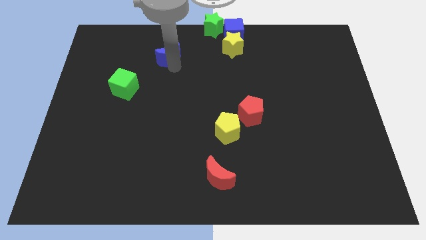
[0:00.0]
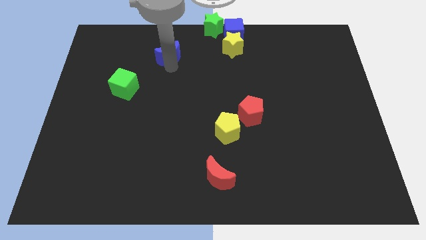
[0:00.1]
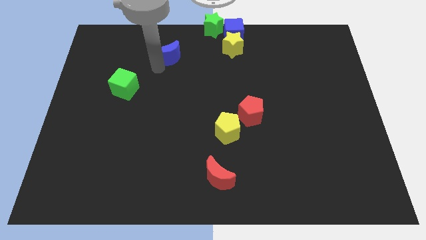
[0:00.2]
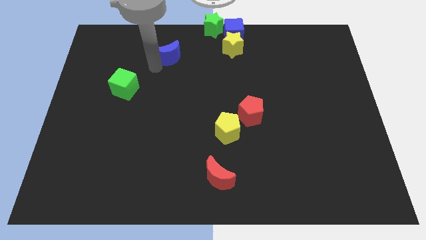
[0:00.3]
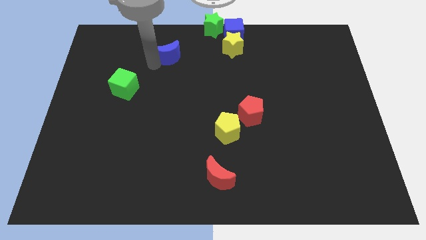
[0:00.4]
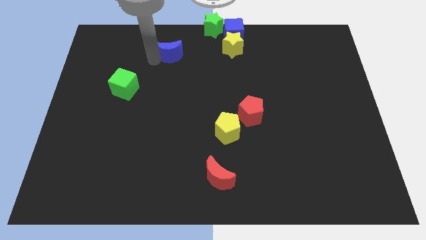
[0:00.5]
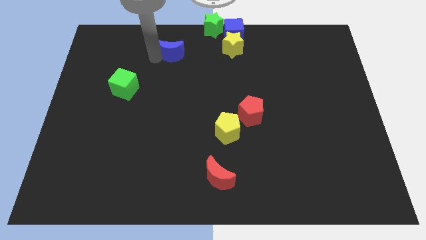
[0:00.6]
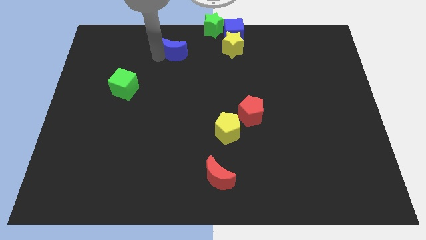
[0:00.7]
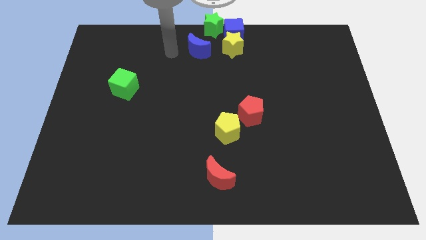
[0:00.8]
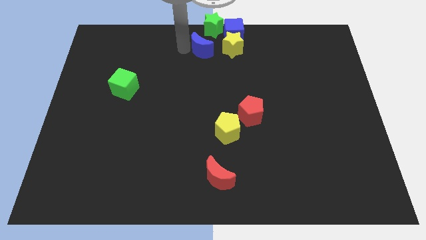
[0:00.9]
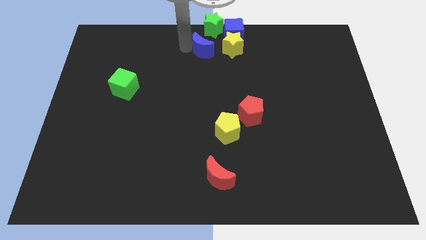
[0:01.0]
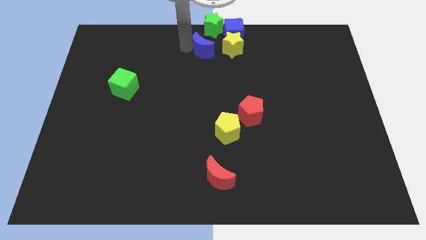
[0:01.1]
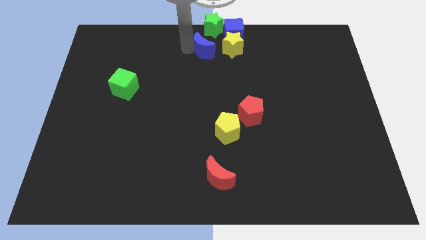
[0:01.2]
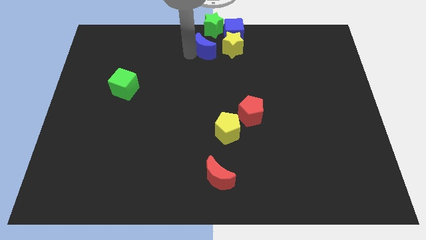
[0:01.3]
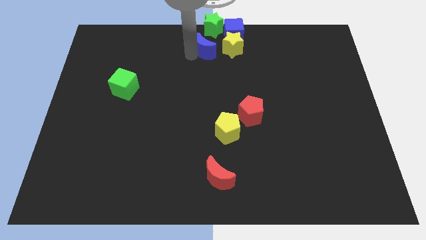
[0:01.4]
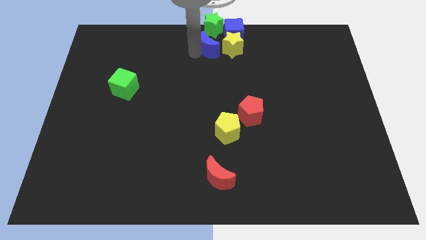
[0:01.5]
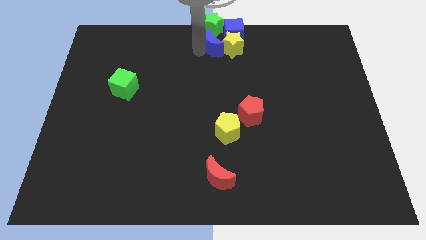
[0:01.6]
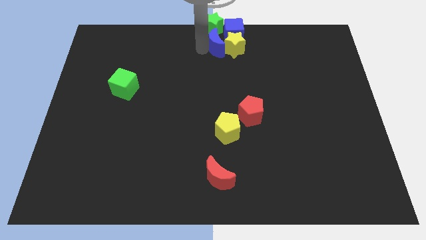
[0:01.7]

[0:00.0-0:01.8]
place the blue moon to the left of the yellow star

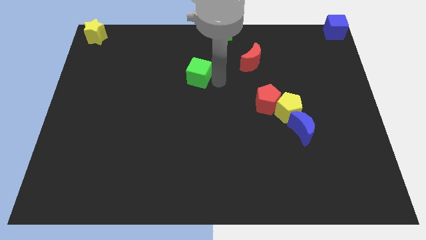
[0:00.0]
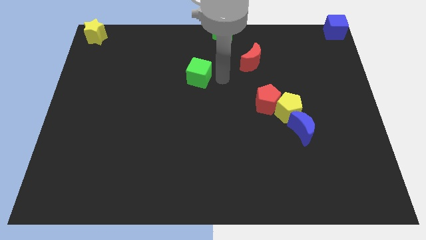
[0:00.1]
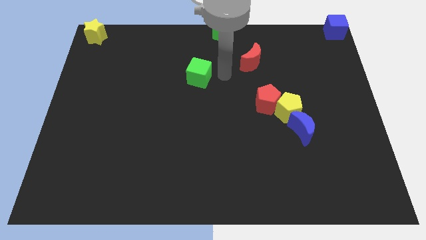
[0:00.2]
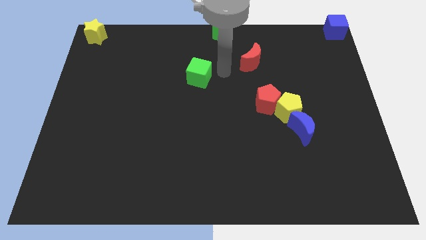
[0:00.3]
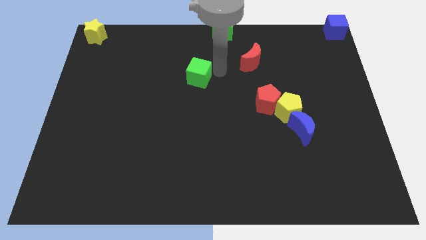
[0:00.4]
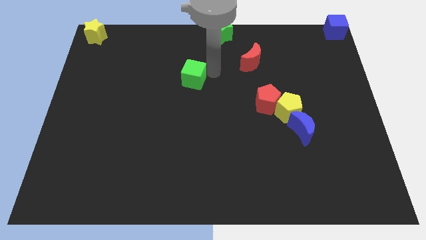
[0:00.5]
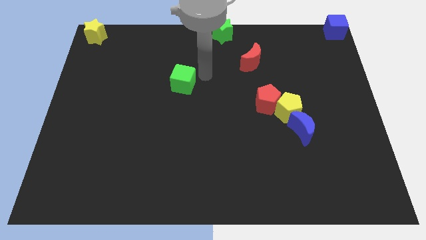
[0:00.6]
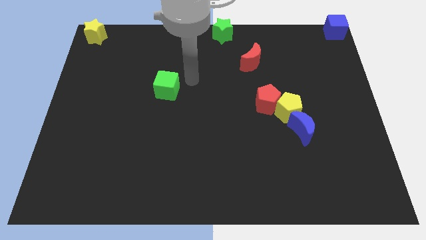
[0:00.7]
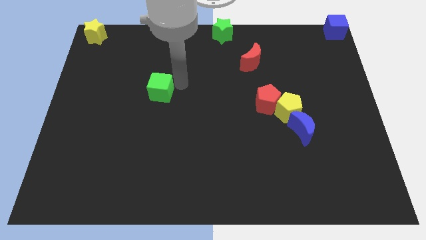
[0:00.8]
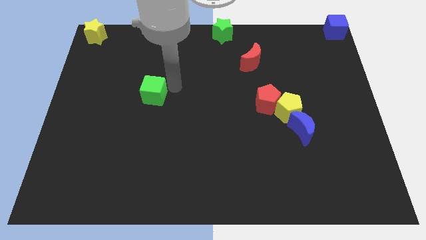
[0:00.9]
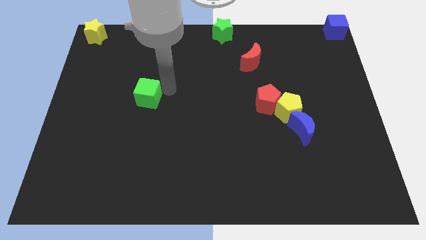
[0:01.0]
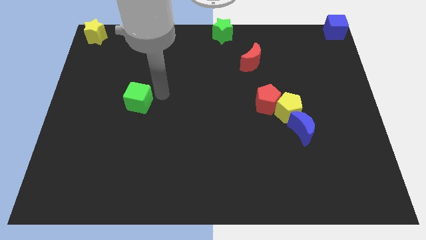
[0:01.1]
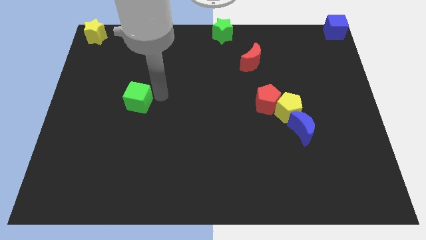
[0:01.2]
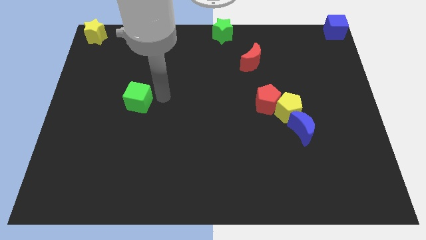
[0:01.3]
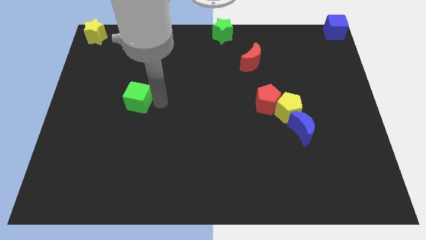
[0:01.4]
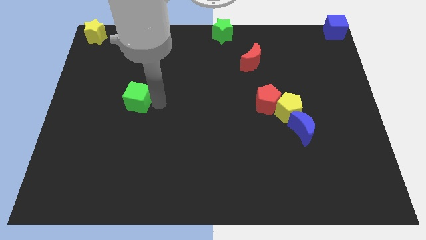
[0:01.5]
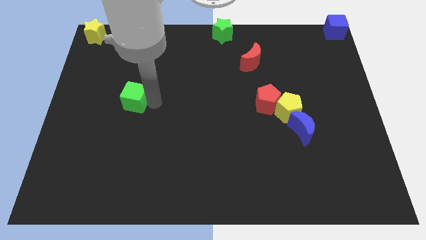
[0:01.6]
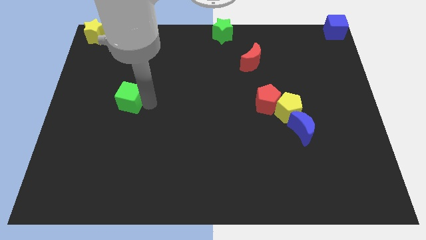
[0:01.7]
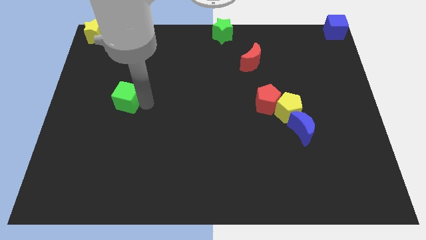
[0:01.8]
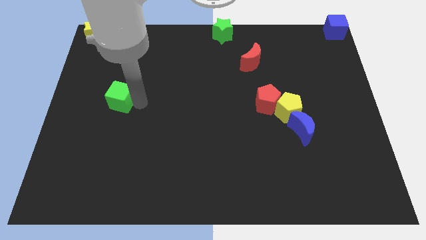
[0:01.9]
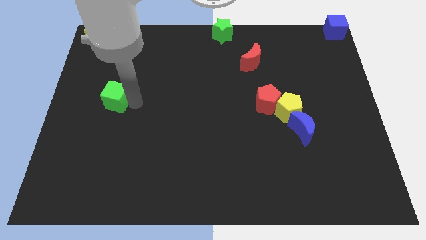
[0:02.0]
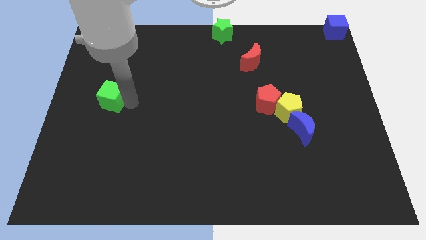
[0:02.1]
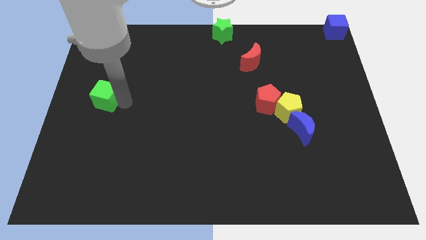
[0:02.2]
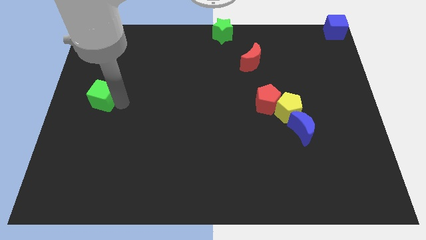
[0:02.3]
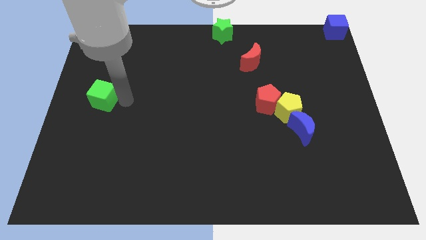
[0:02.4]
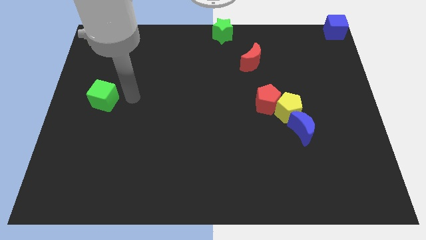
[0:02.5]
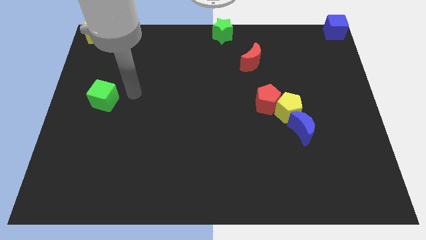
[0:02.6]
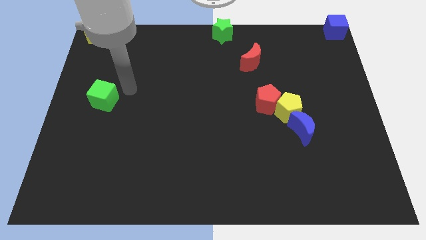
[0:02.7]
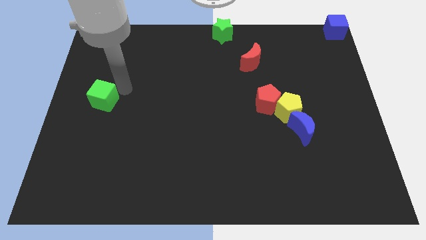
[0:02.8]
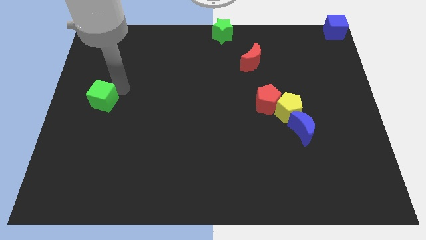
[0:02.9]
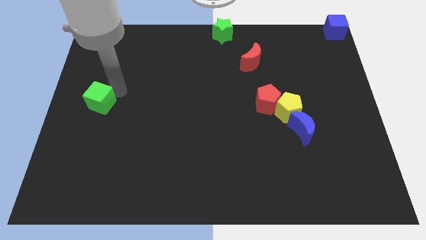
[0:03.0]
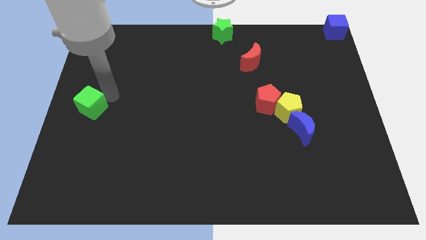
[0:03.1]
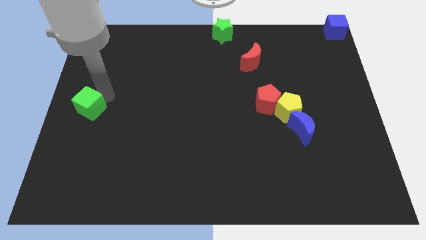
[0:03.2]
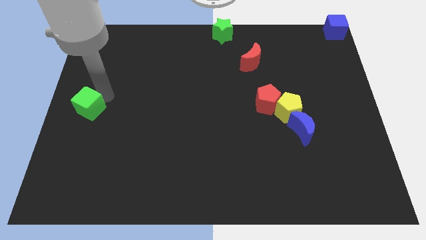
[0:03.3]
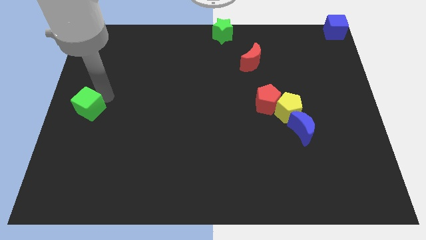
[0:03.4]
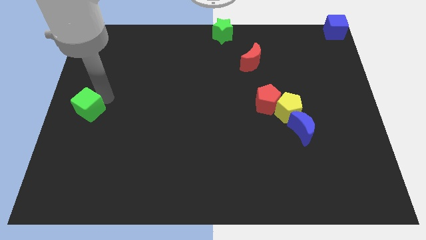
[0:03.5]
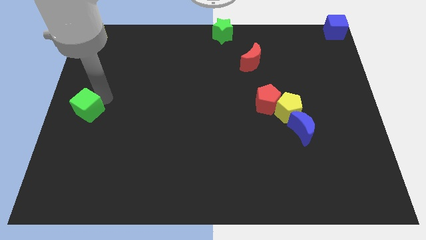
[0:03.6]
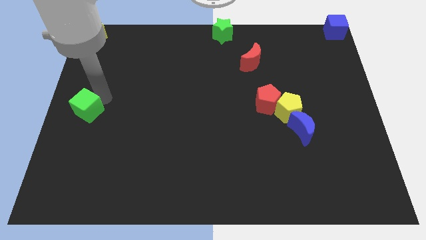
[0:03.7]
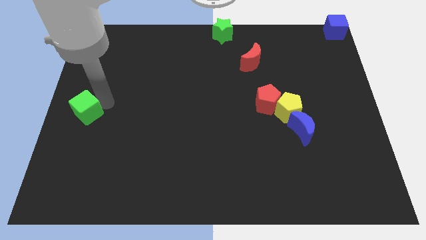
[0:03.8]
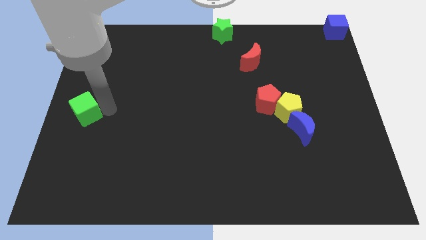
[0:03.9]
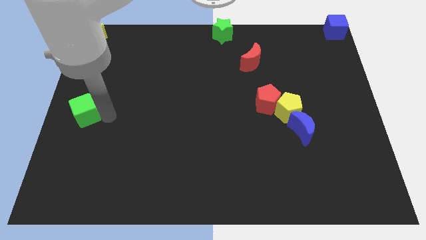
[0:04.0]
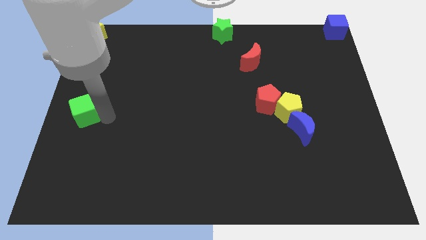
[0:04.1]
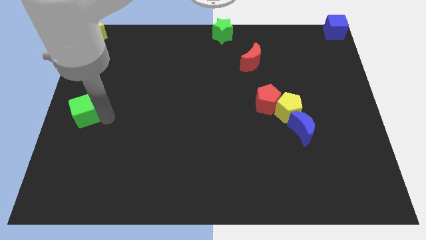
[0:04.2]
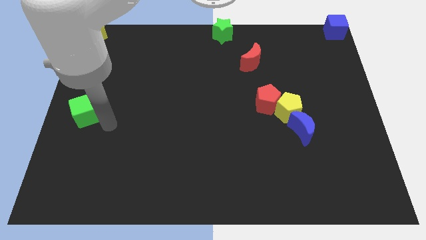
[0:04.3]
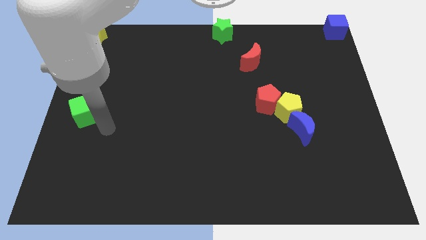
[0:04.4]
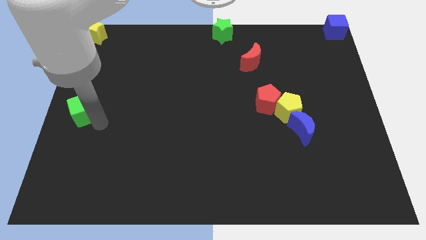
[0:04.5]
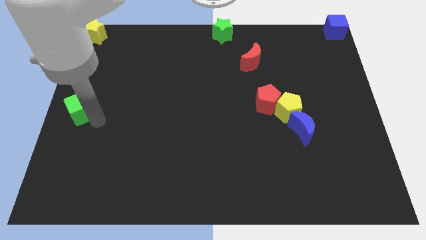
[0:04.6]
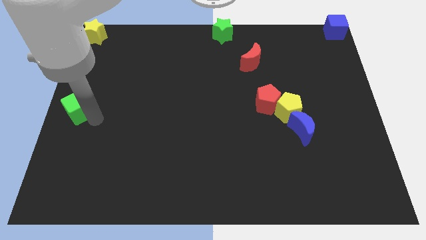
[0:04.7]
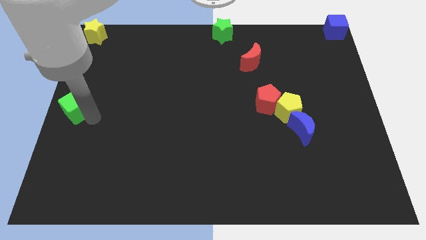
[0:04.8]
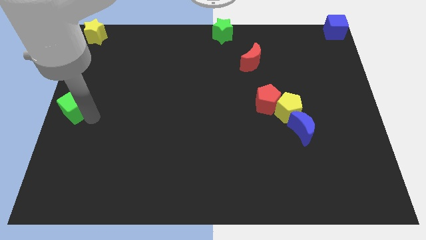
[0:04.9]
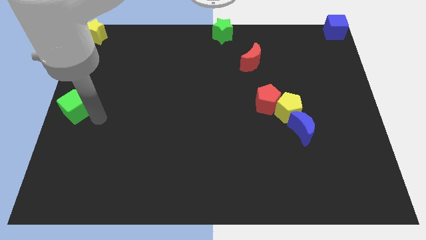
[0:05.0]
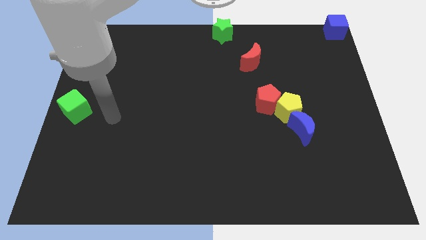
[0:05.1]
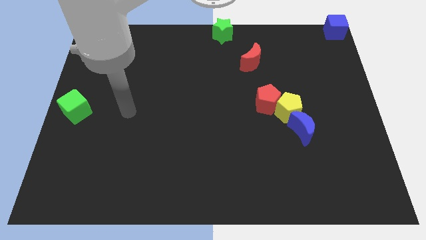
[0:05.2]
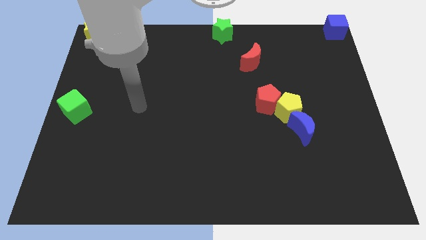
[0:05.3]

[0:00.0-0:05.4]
place the green cube to the center left of the board

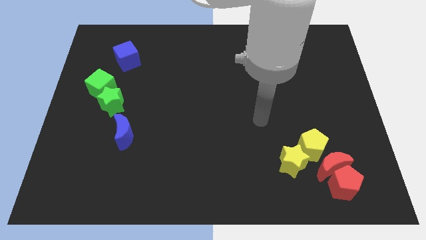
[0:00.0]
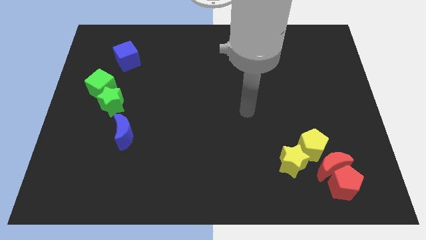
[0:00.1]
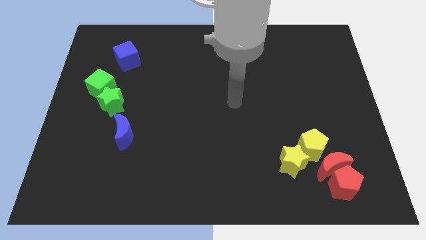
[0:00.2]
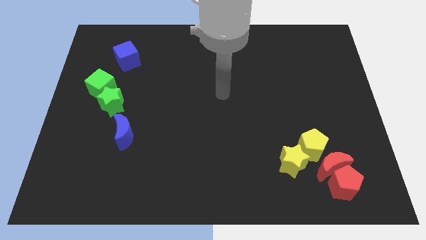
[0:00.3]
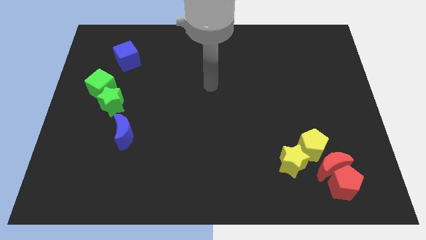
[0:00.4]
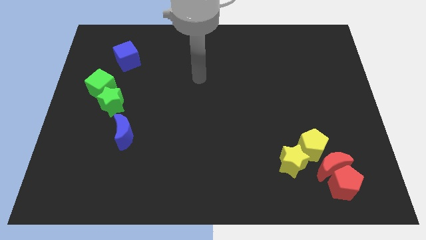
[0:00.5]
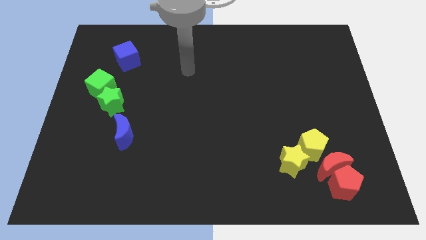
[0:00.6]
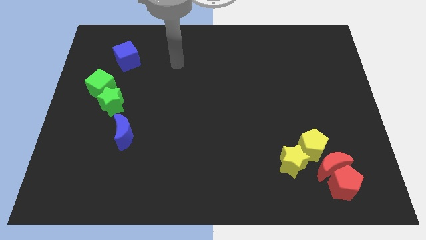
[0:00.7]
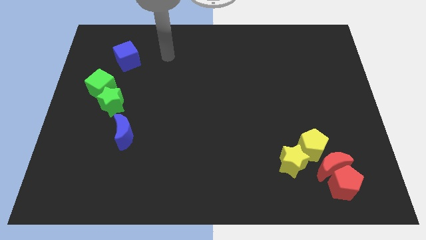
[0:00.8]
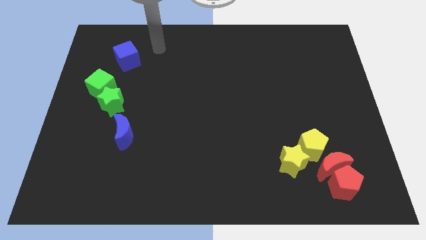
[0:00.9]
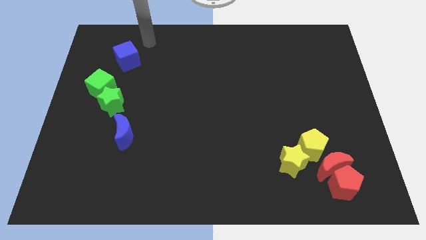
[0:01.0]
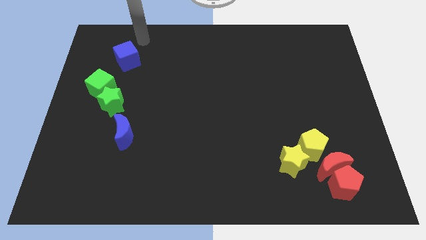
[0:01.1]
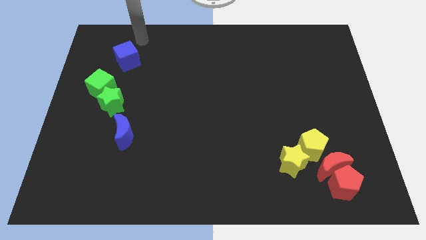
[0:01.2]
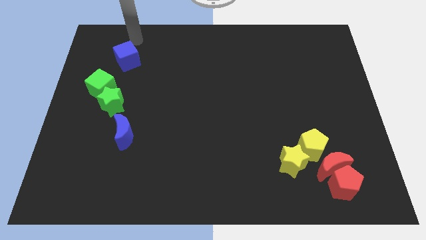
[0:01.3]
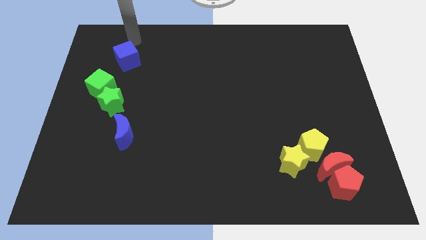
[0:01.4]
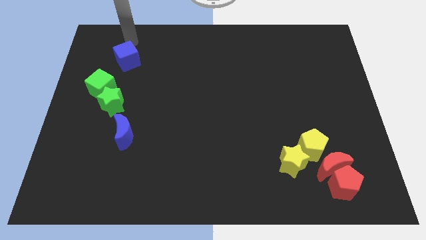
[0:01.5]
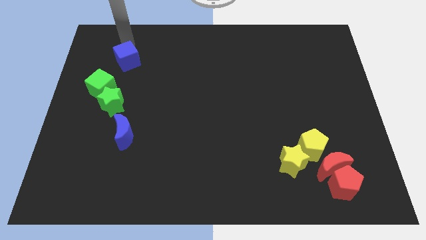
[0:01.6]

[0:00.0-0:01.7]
move your arm to the top of the blue cube
